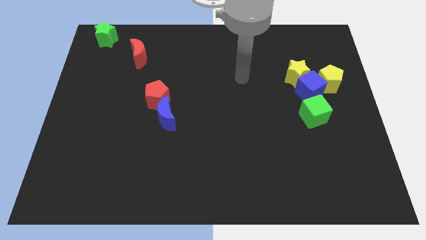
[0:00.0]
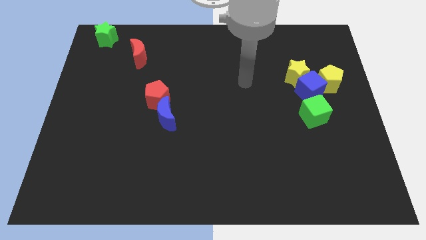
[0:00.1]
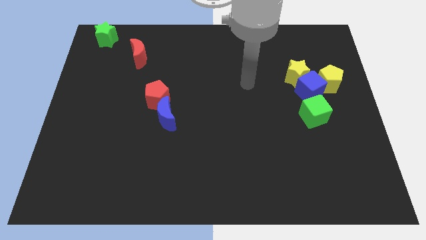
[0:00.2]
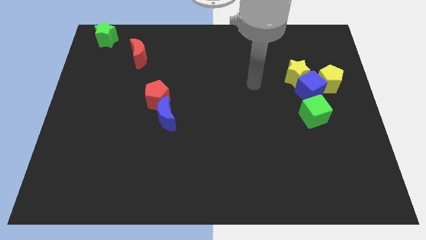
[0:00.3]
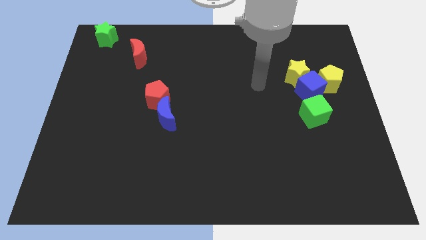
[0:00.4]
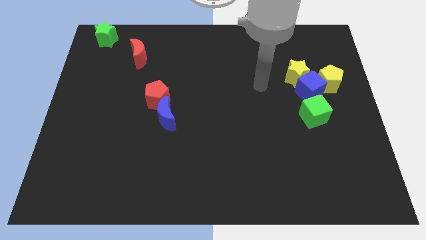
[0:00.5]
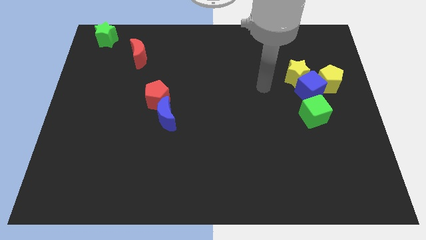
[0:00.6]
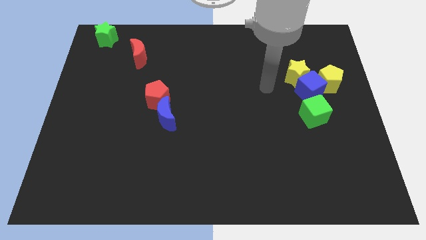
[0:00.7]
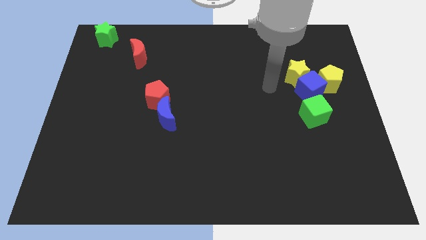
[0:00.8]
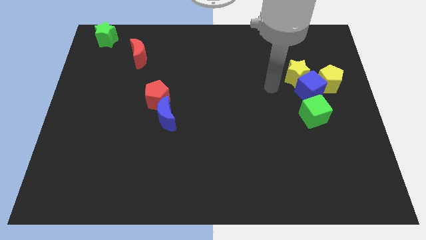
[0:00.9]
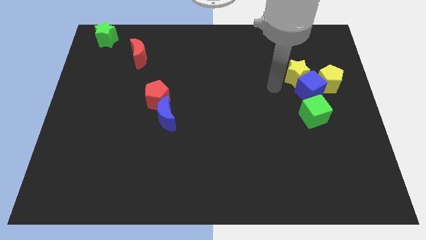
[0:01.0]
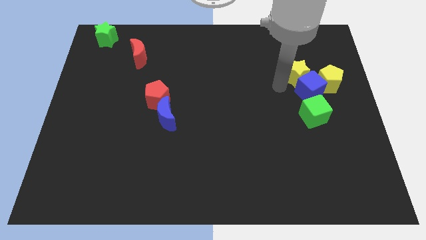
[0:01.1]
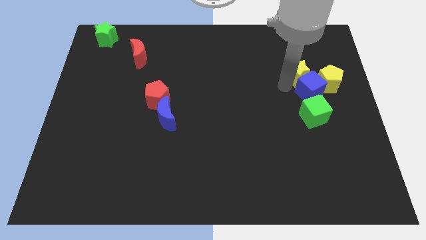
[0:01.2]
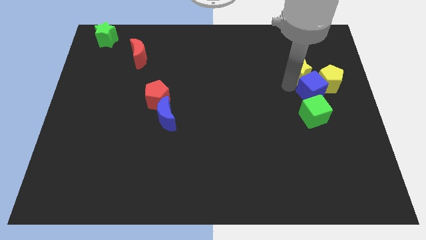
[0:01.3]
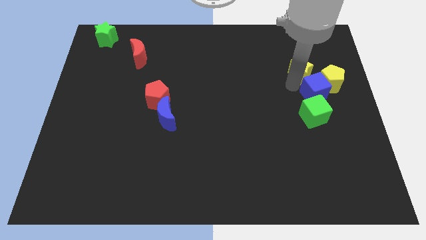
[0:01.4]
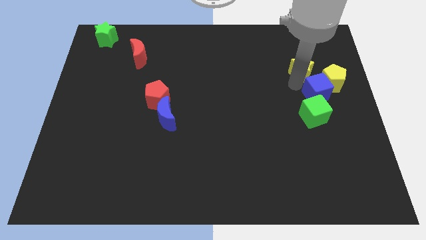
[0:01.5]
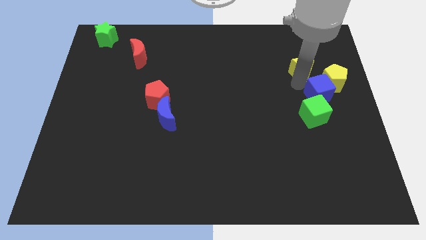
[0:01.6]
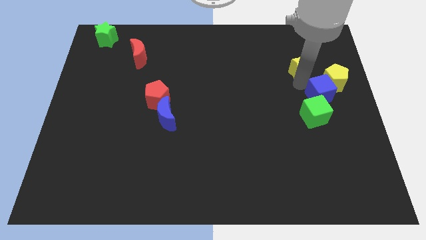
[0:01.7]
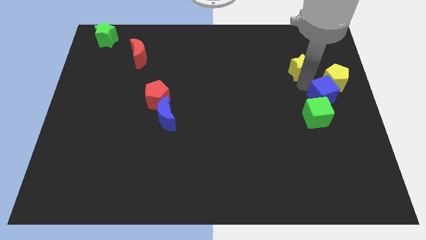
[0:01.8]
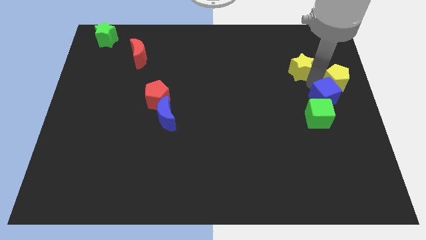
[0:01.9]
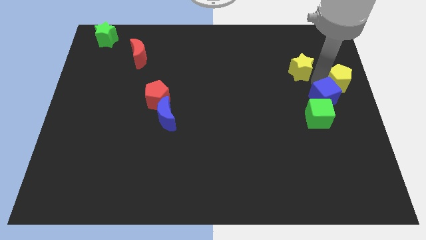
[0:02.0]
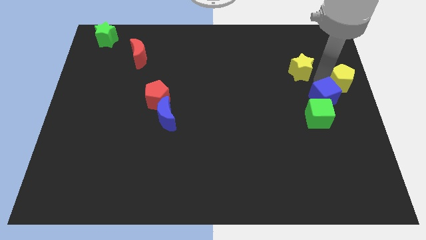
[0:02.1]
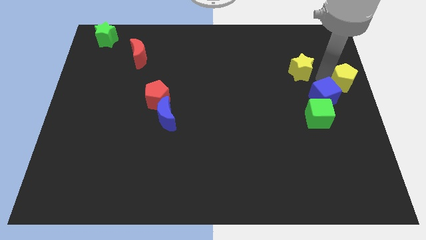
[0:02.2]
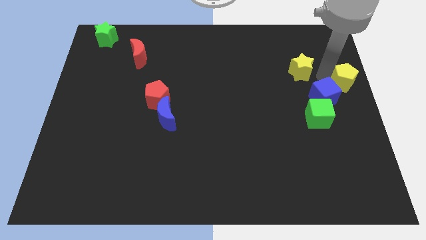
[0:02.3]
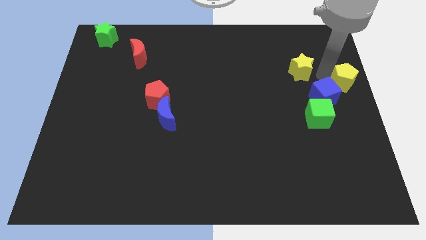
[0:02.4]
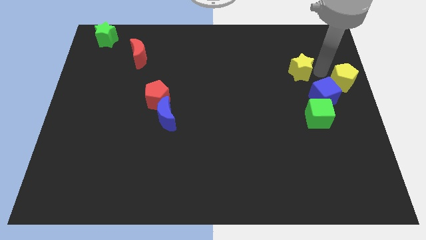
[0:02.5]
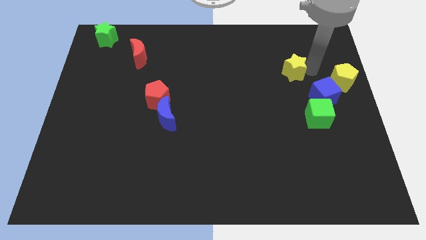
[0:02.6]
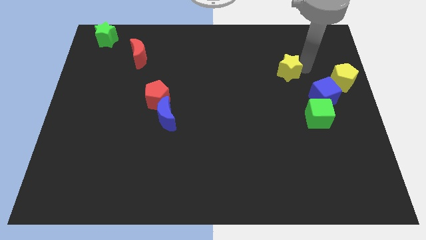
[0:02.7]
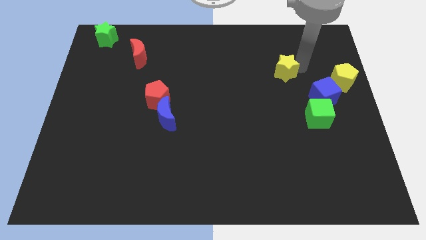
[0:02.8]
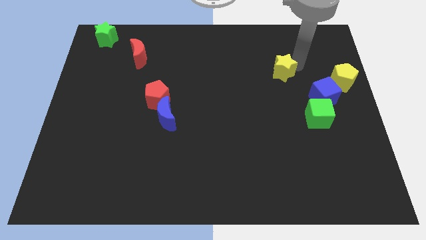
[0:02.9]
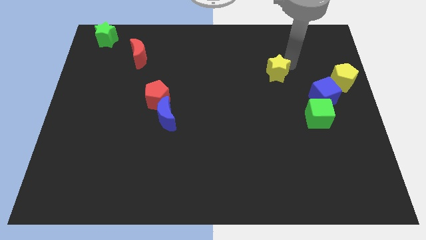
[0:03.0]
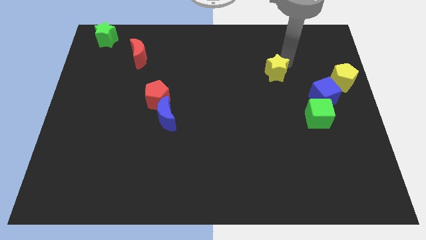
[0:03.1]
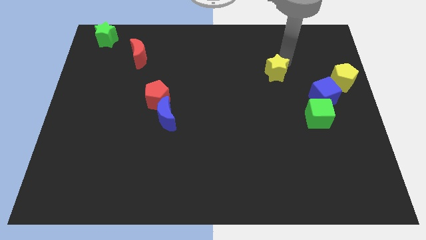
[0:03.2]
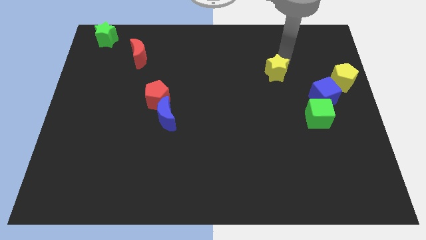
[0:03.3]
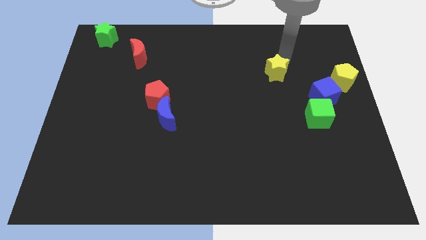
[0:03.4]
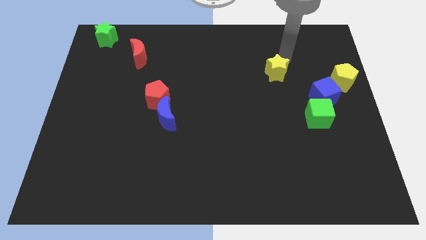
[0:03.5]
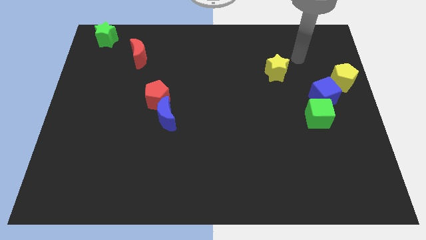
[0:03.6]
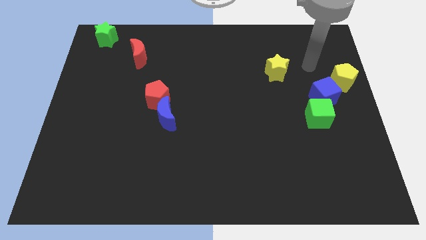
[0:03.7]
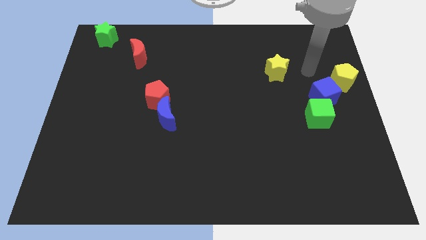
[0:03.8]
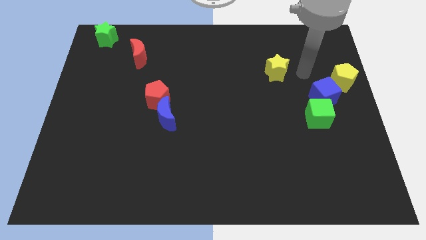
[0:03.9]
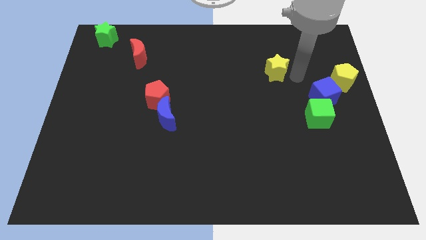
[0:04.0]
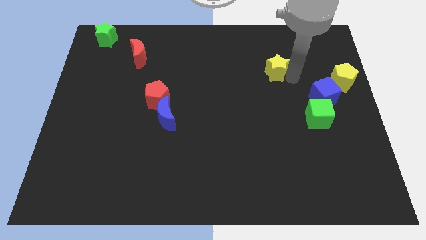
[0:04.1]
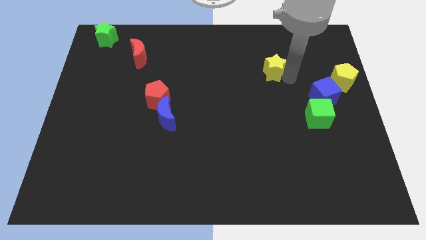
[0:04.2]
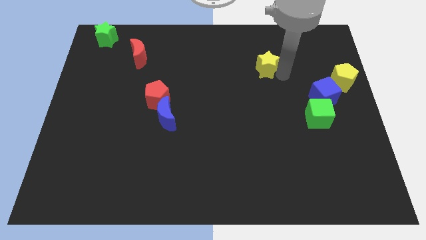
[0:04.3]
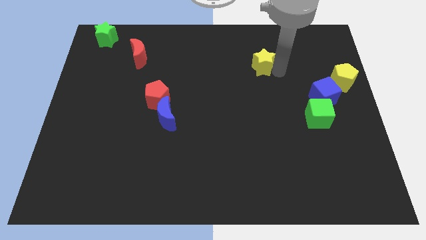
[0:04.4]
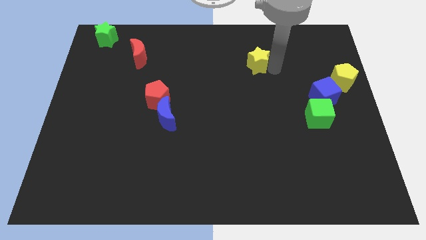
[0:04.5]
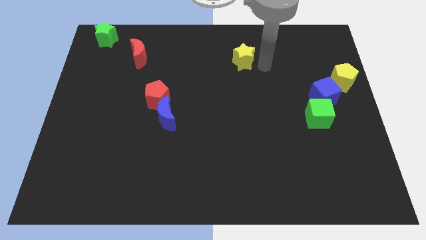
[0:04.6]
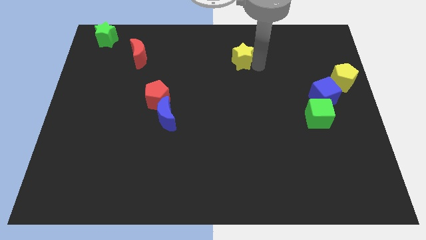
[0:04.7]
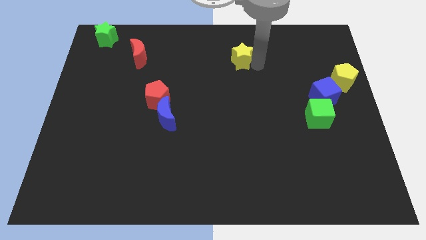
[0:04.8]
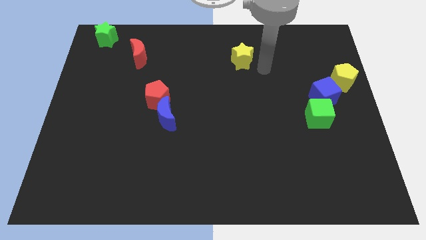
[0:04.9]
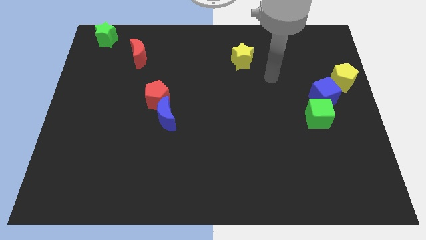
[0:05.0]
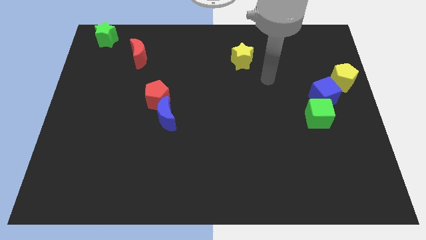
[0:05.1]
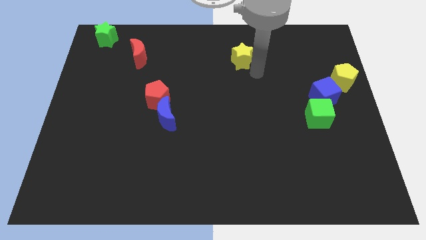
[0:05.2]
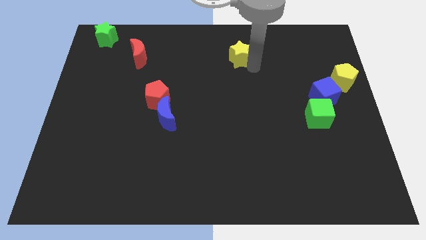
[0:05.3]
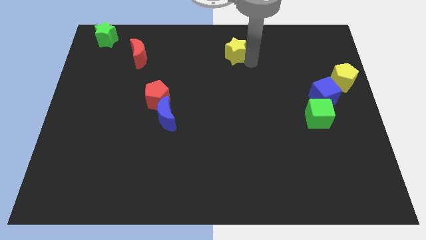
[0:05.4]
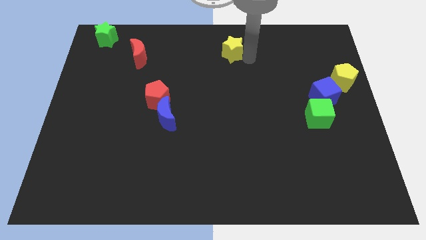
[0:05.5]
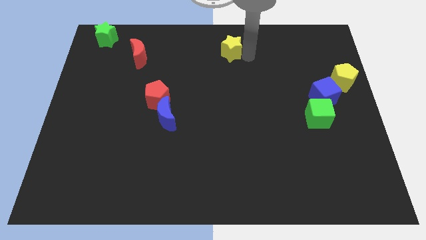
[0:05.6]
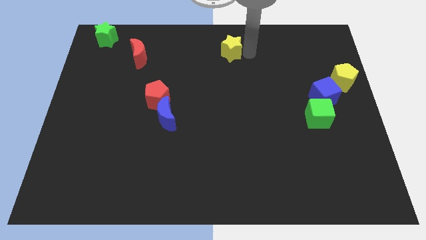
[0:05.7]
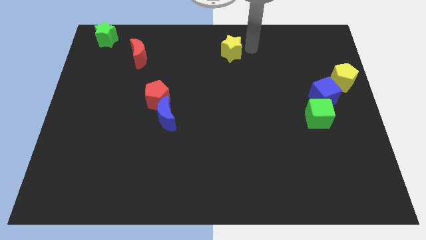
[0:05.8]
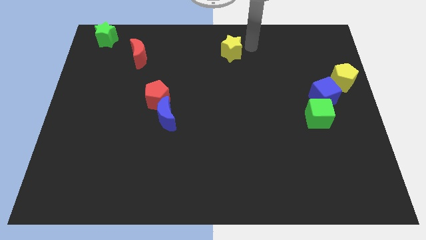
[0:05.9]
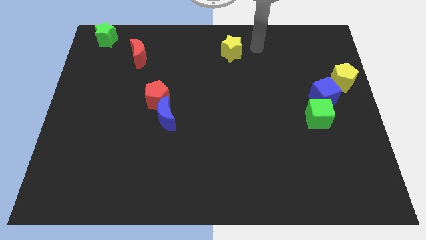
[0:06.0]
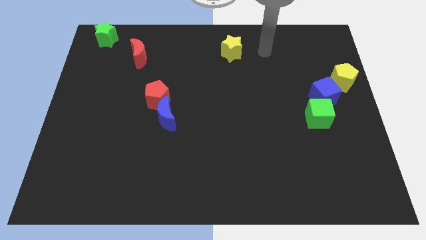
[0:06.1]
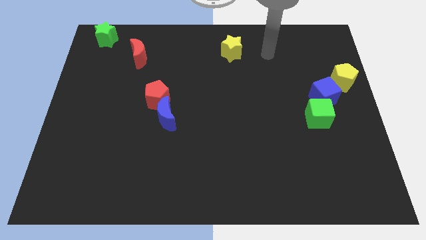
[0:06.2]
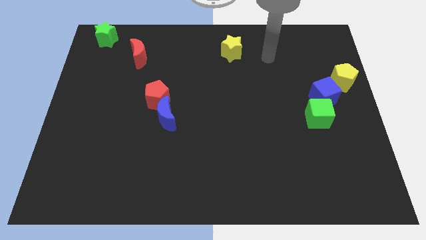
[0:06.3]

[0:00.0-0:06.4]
move the yellow star away from the blue cube

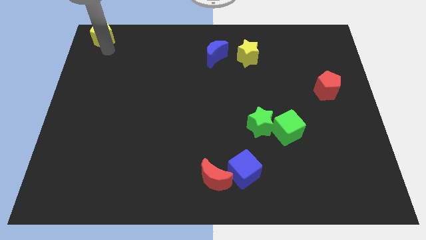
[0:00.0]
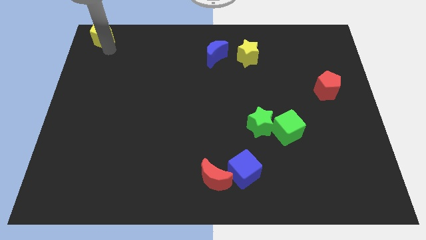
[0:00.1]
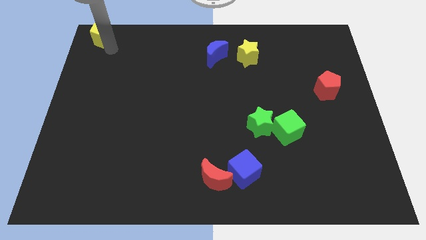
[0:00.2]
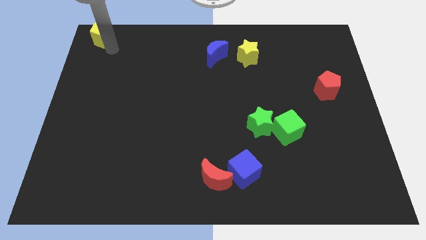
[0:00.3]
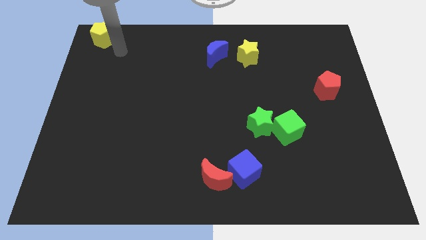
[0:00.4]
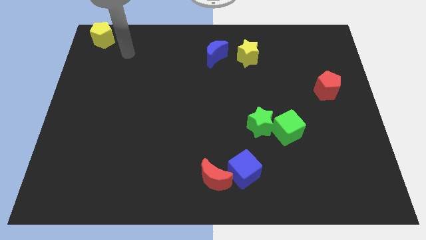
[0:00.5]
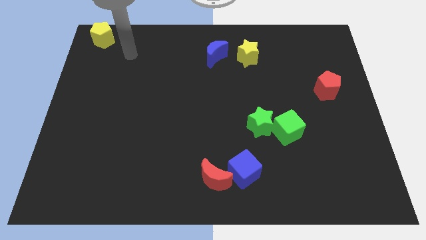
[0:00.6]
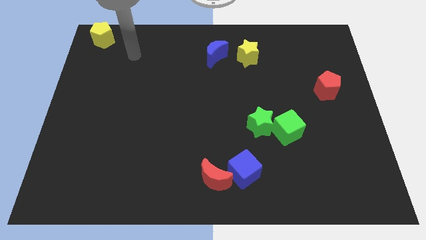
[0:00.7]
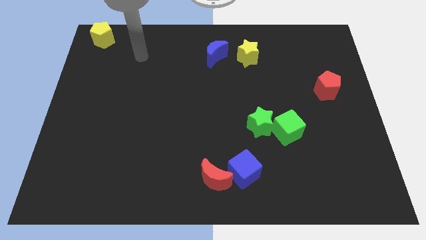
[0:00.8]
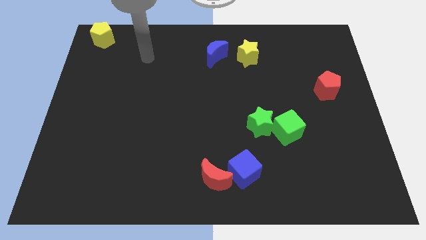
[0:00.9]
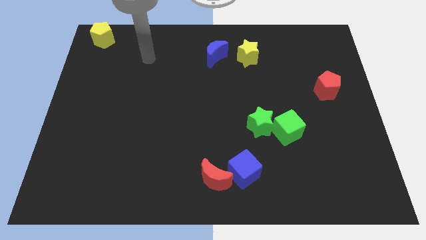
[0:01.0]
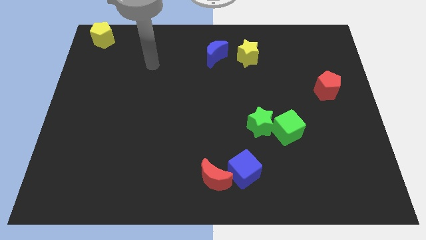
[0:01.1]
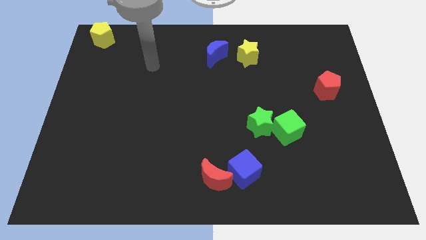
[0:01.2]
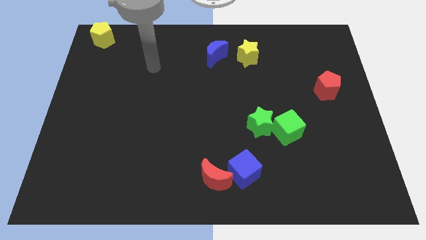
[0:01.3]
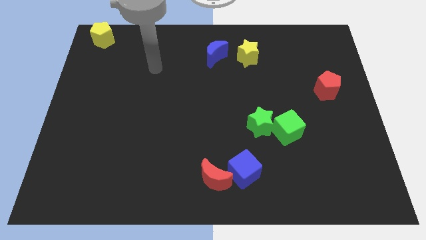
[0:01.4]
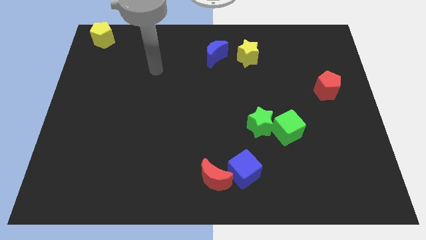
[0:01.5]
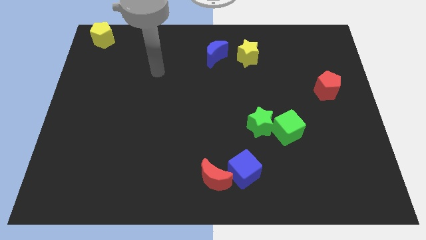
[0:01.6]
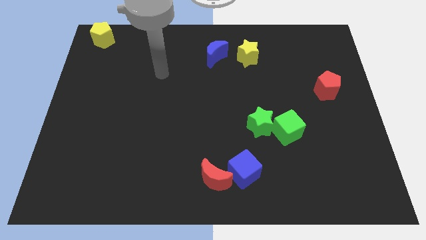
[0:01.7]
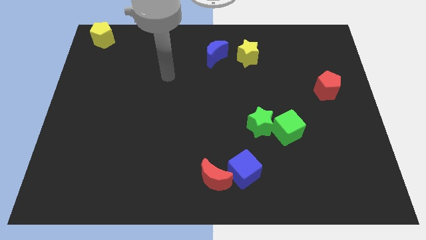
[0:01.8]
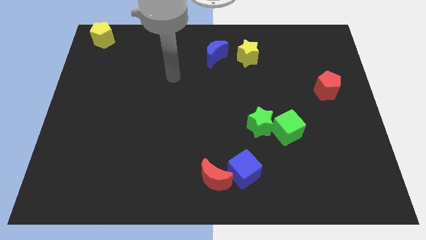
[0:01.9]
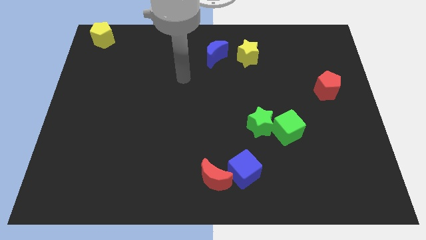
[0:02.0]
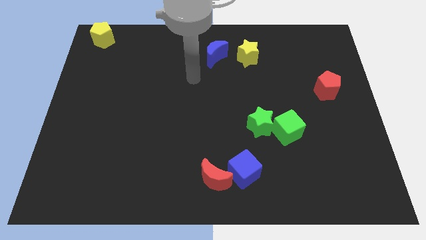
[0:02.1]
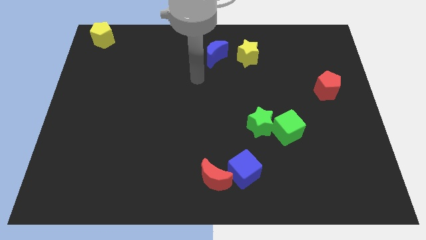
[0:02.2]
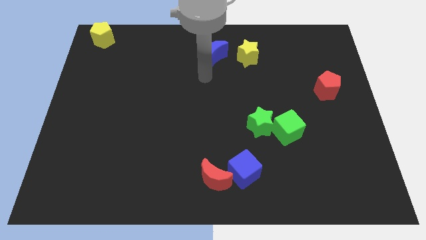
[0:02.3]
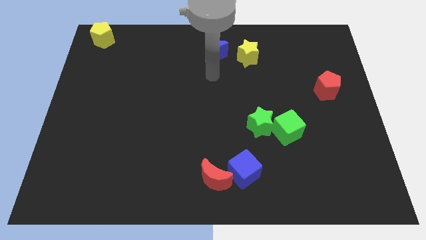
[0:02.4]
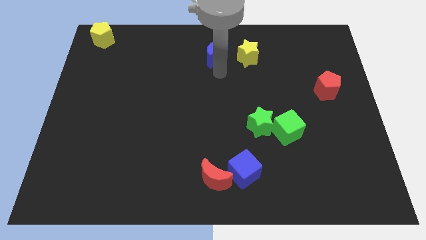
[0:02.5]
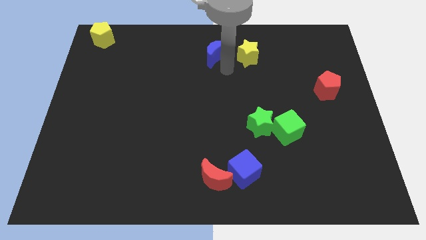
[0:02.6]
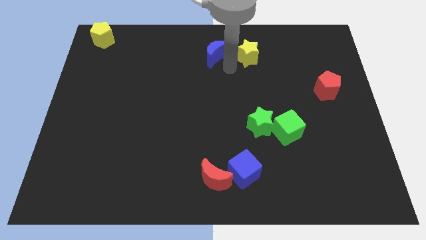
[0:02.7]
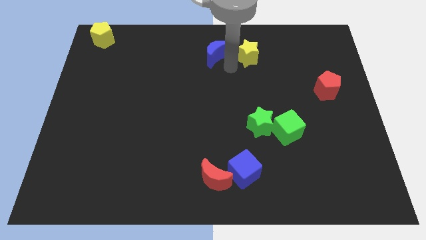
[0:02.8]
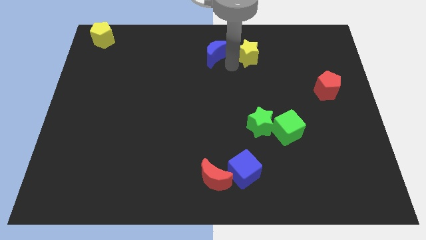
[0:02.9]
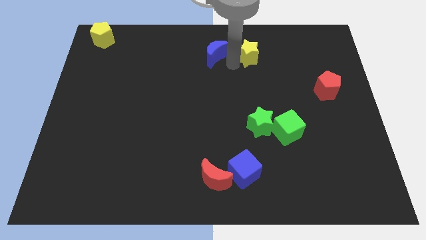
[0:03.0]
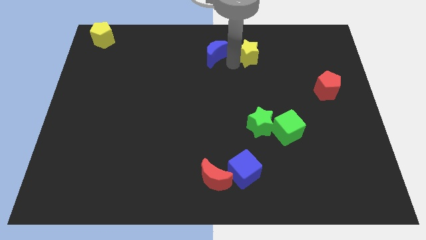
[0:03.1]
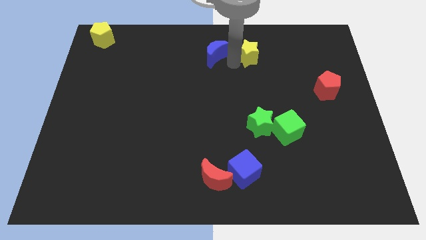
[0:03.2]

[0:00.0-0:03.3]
move the arm away from the yellow pentagon
